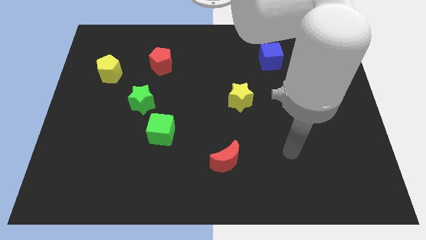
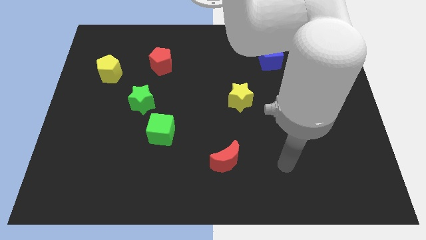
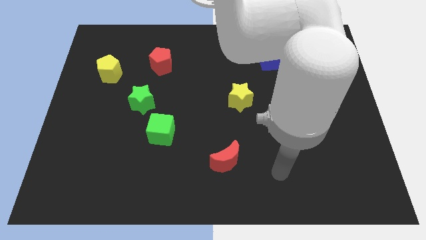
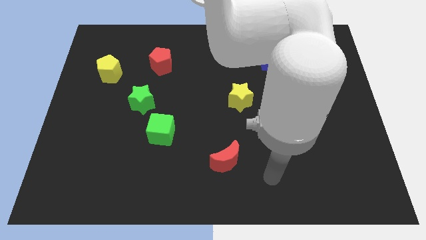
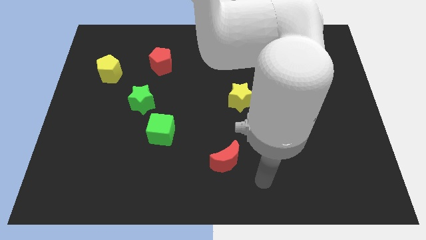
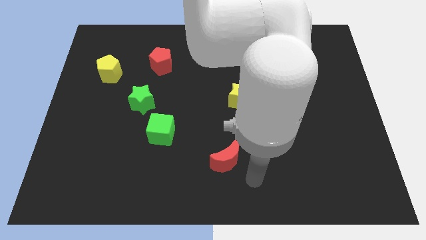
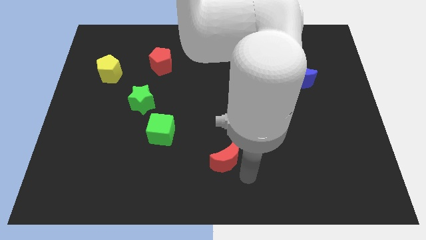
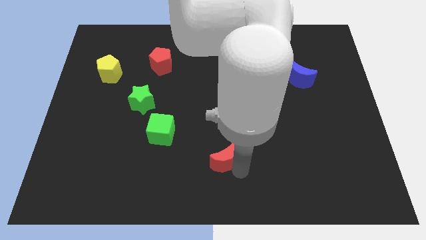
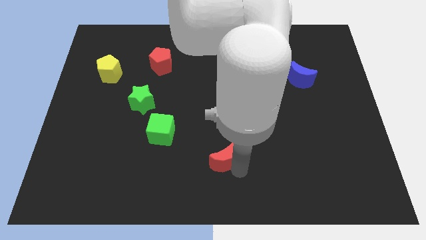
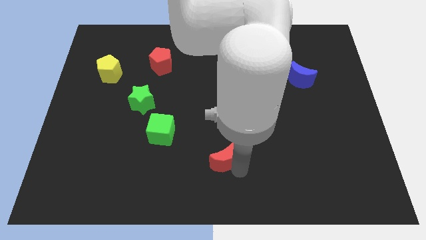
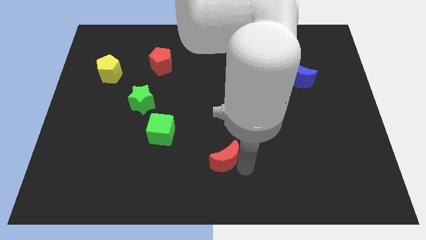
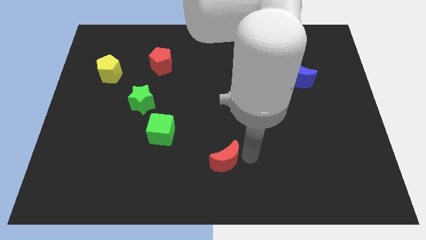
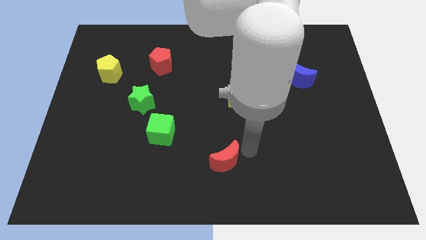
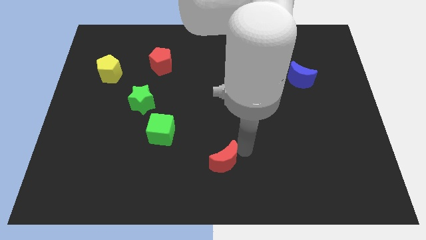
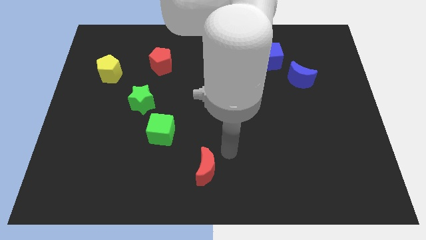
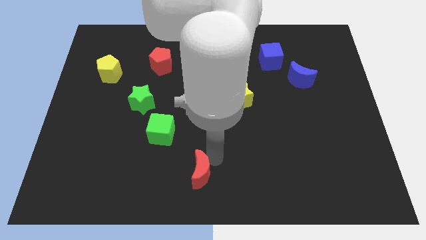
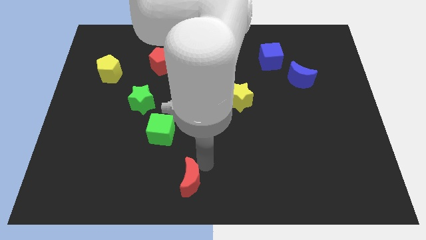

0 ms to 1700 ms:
slightly push the red crescent towards the down side of the board

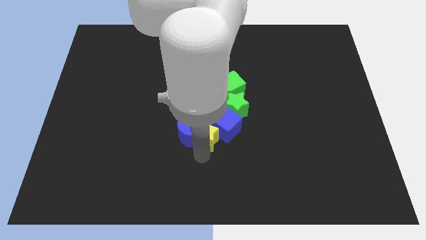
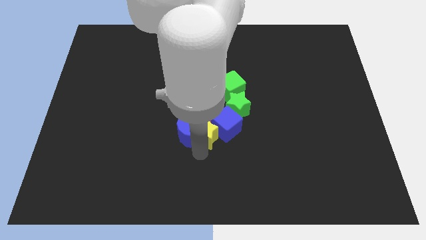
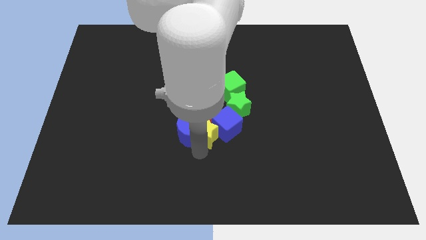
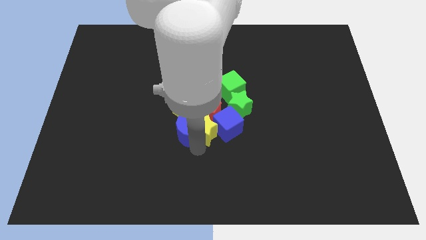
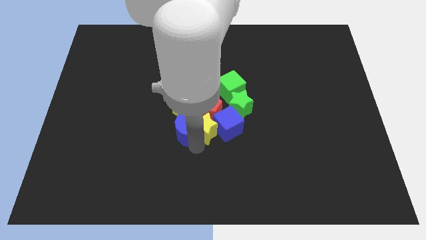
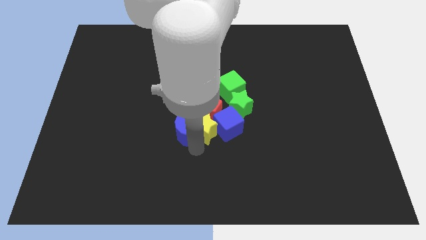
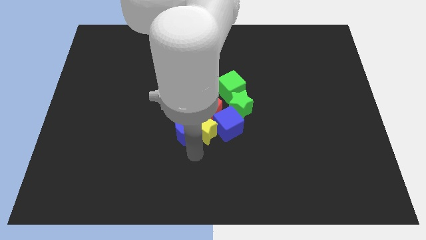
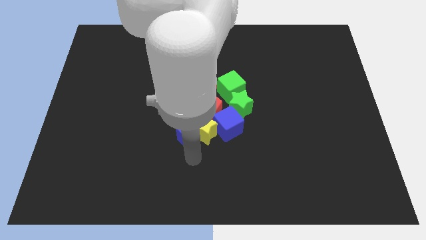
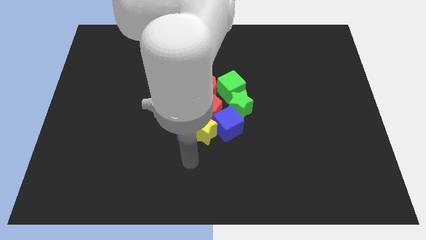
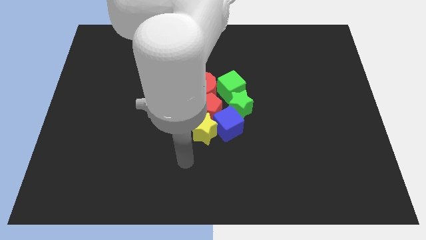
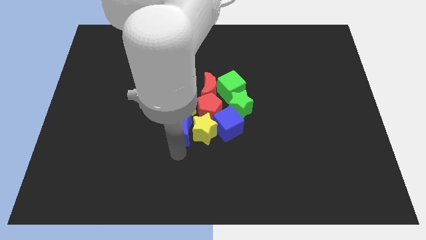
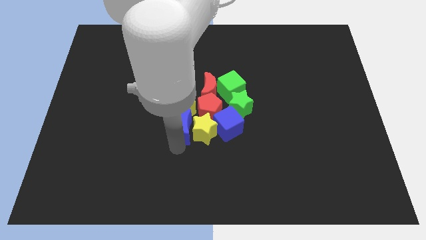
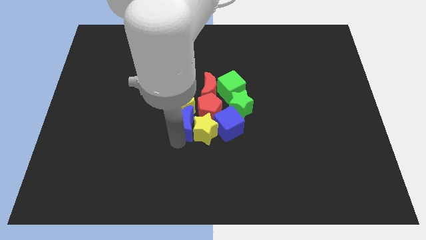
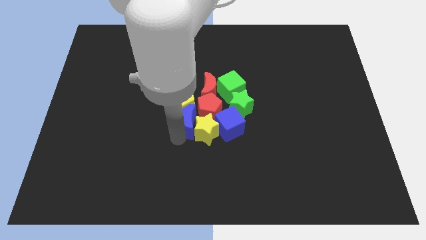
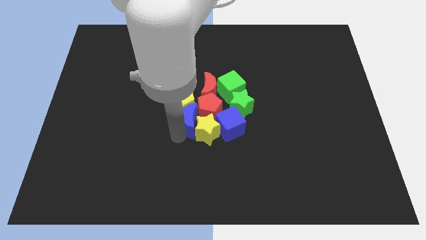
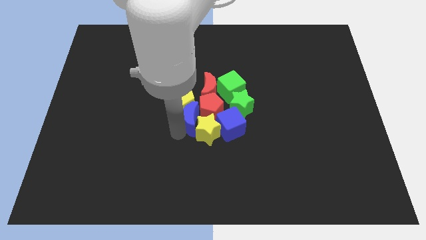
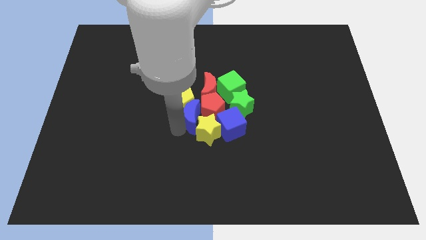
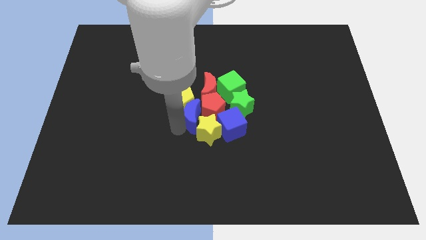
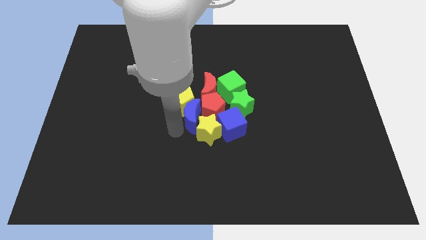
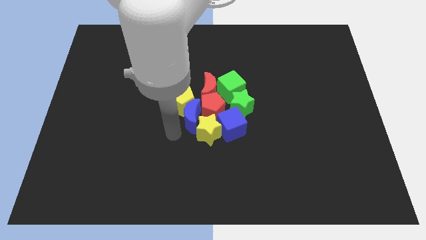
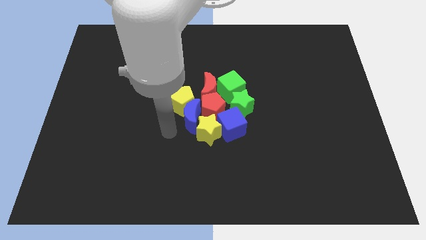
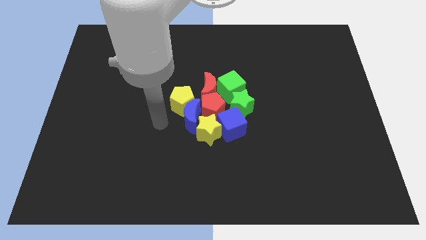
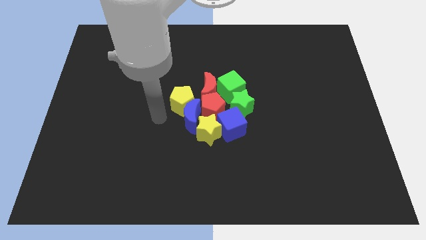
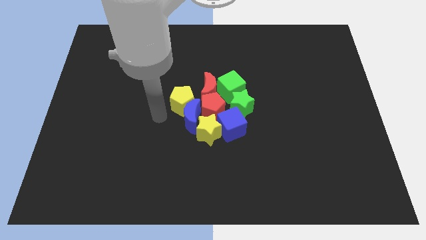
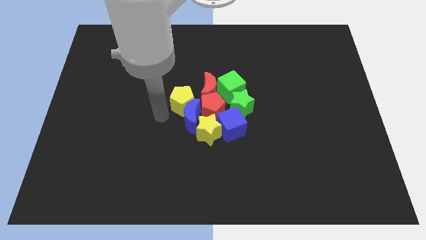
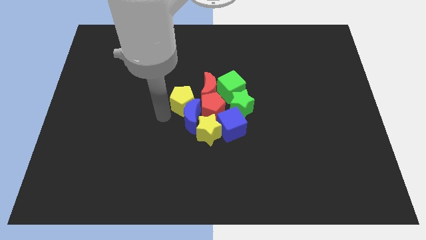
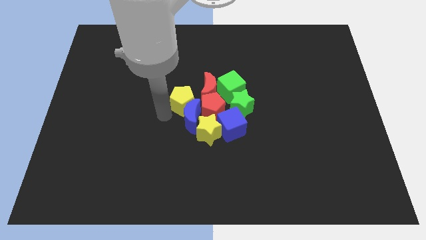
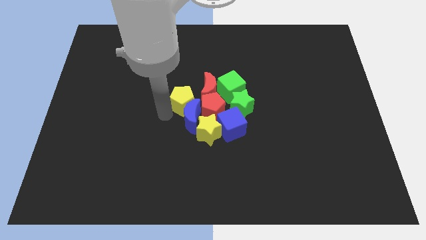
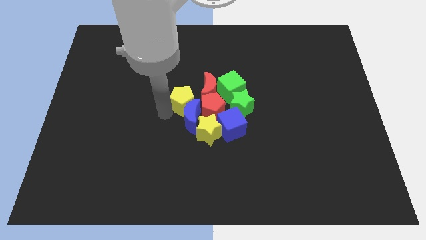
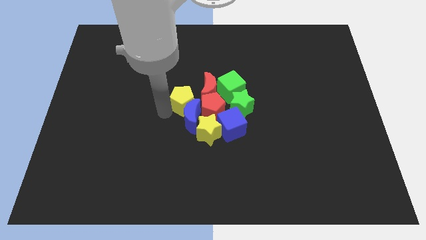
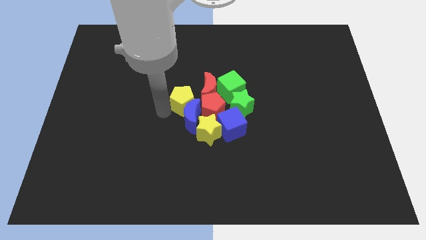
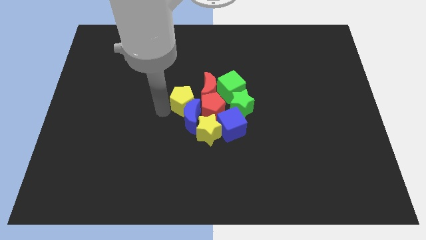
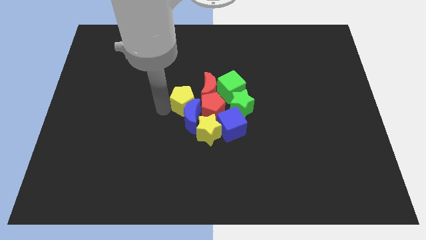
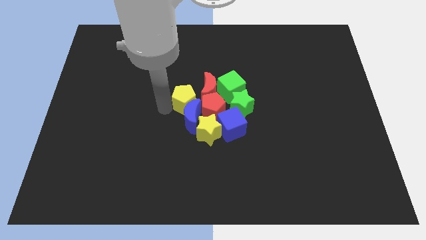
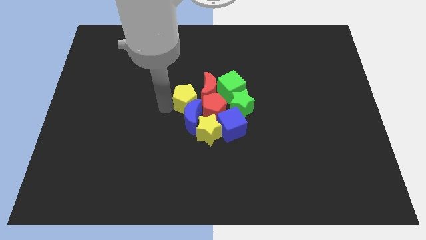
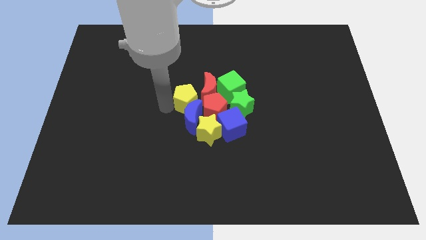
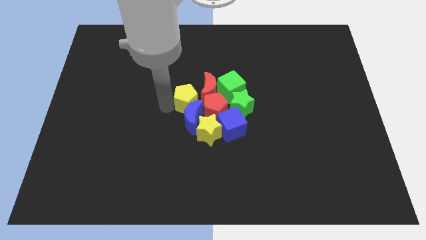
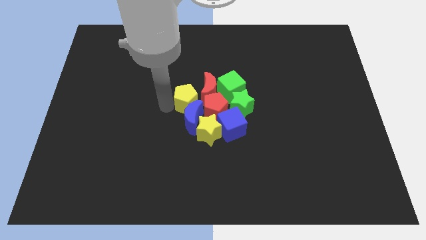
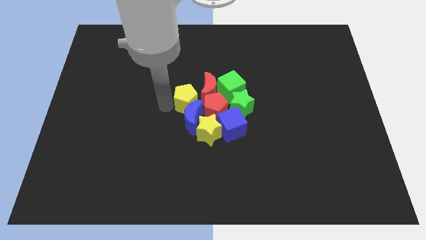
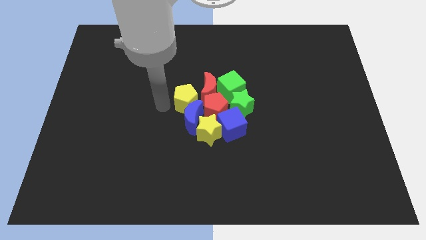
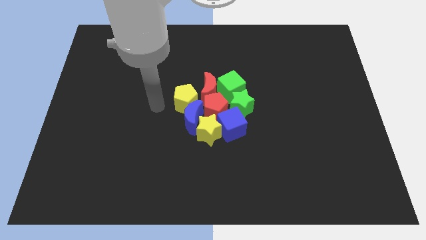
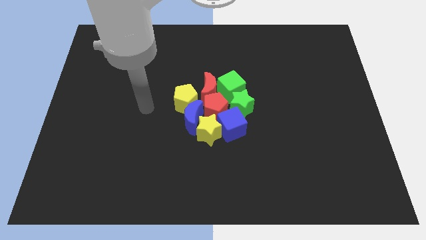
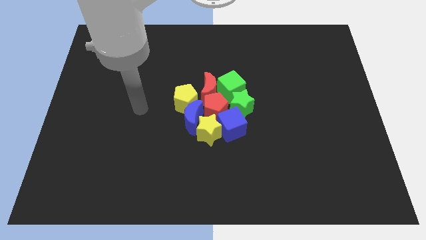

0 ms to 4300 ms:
group up all the blocks at the center of the board

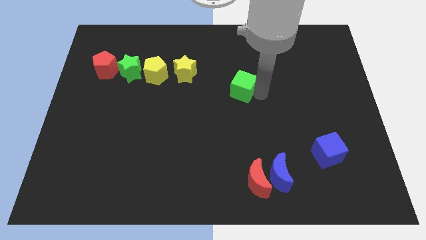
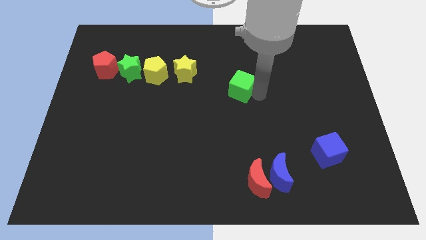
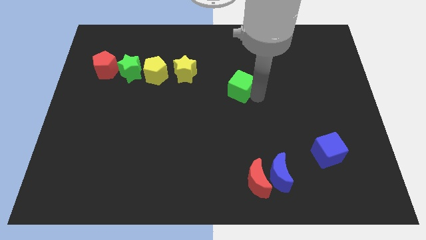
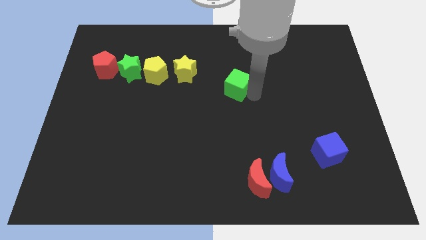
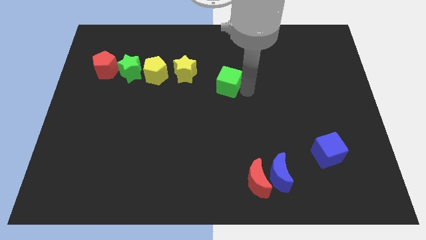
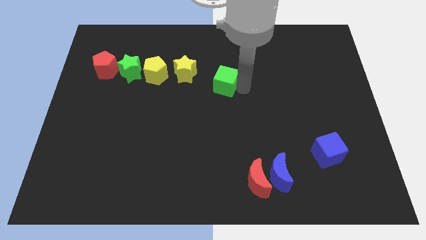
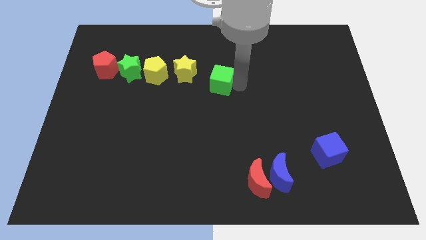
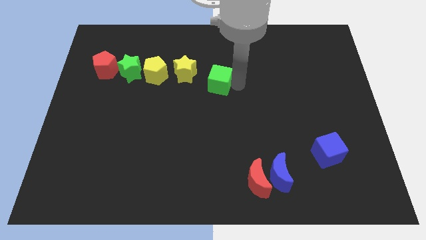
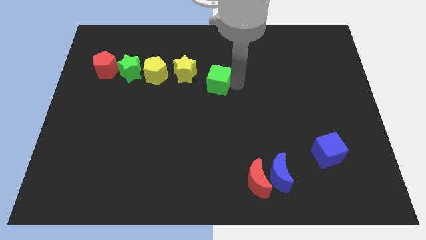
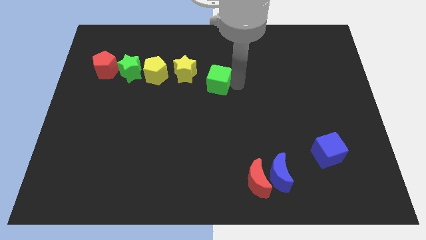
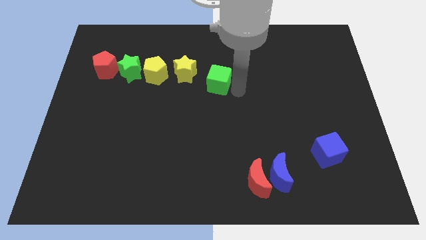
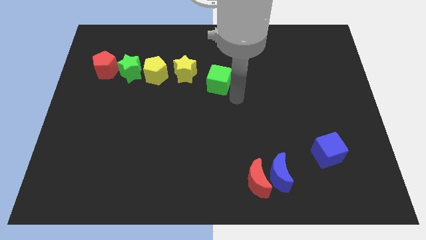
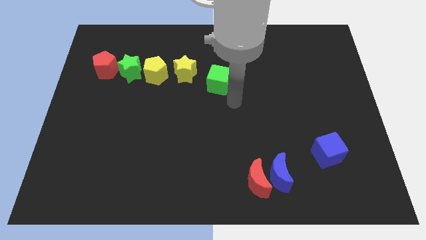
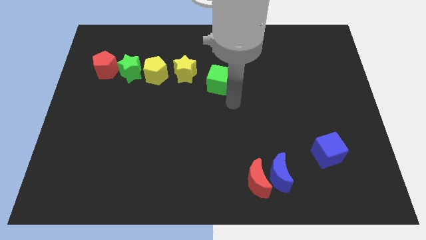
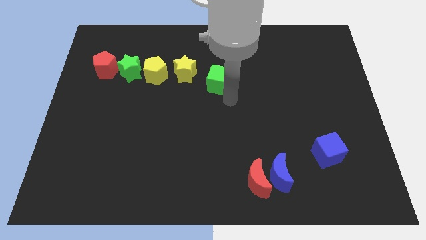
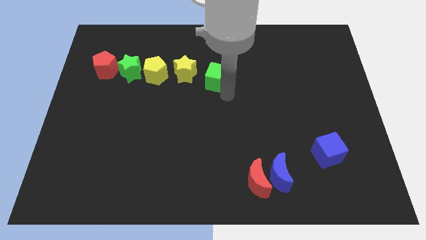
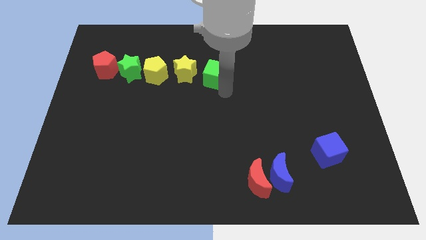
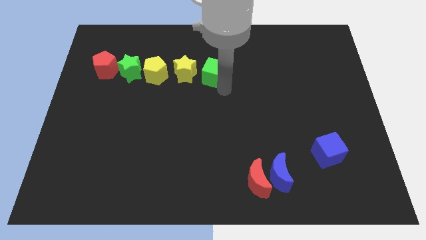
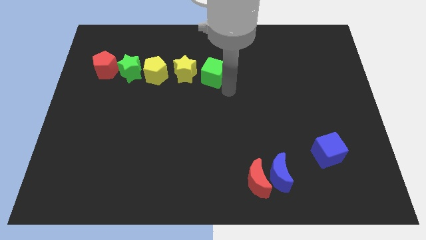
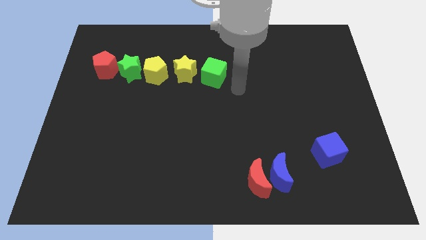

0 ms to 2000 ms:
put the green cube on the right side of the yellow star

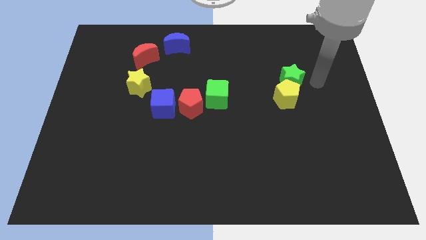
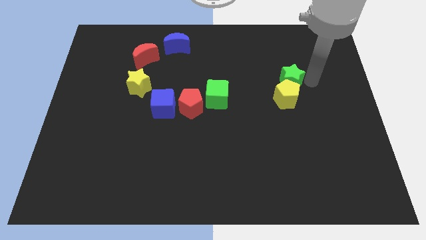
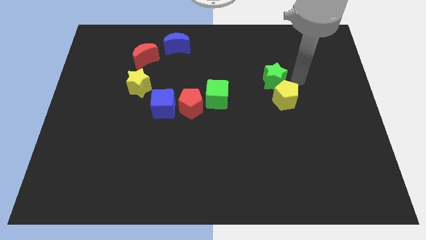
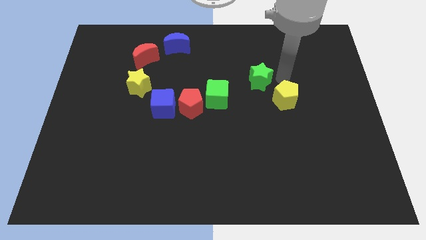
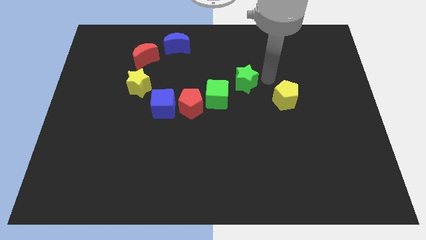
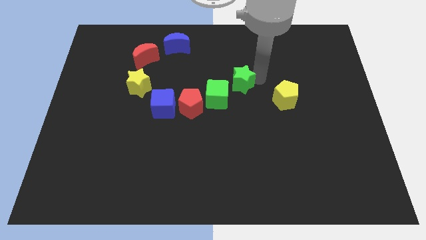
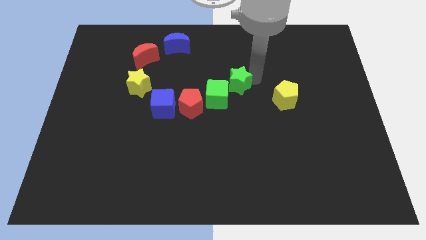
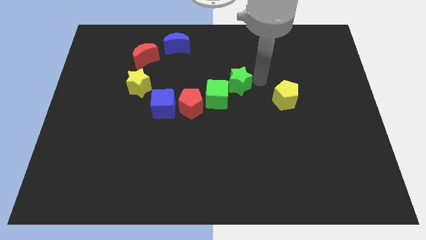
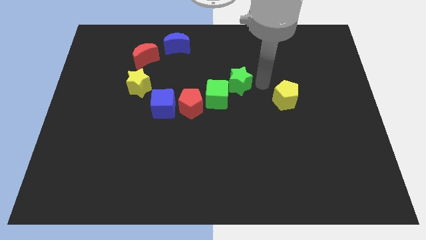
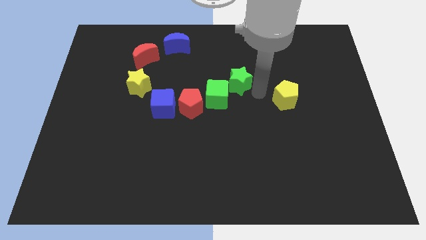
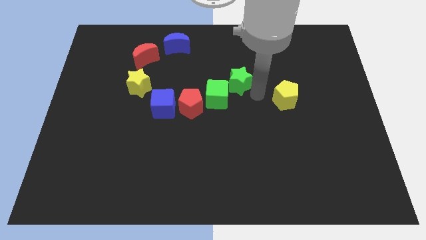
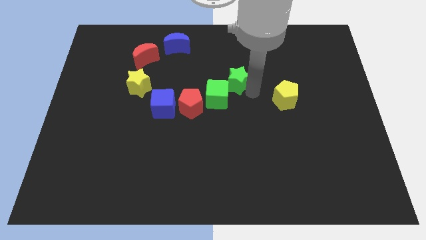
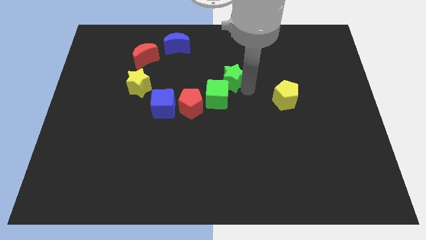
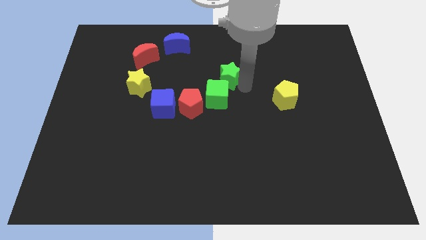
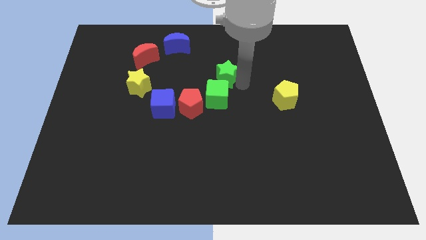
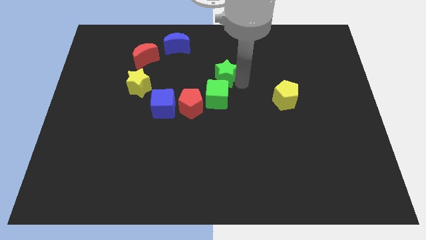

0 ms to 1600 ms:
place the green star above the green cube
